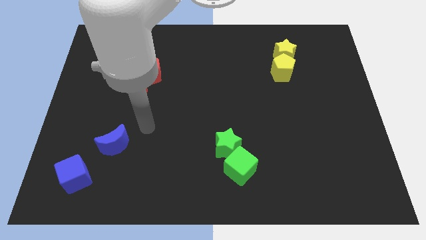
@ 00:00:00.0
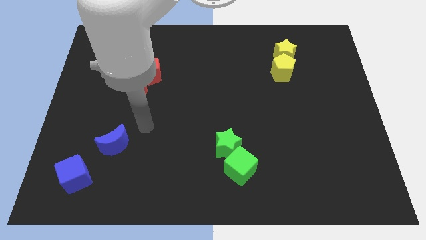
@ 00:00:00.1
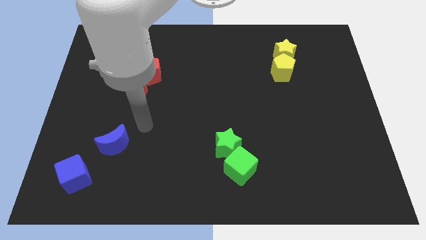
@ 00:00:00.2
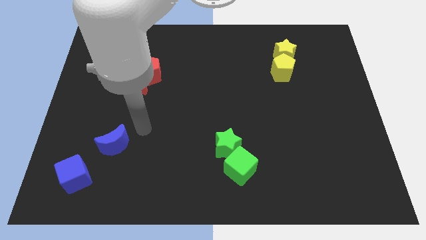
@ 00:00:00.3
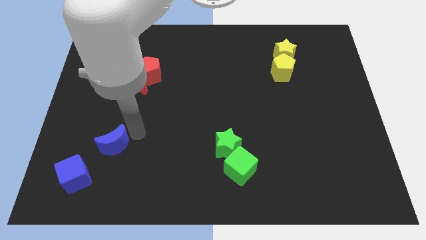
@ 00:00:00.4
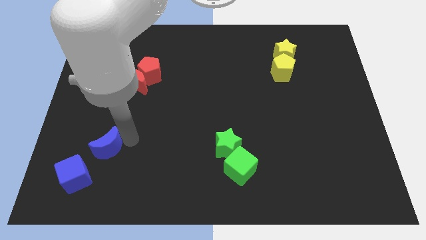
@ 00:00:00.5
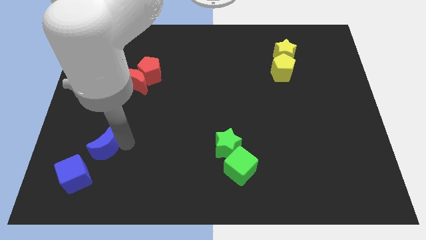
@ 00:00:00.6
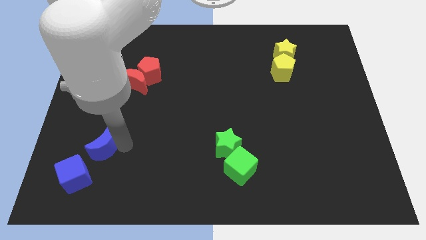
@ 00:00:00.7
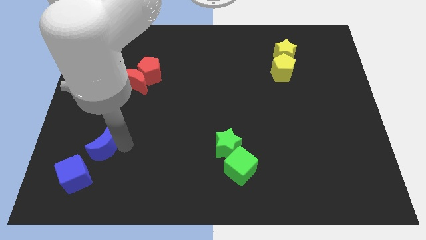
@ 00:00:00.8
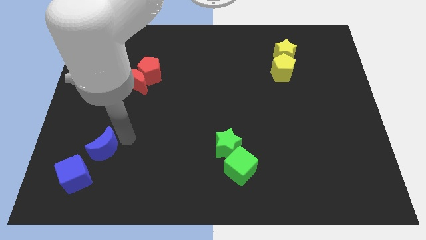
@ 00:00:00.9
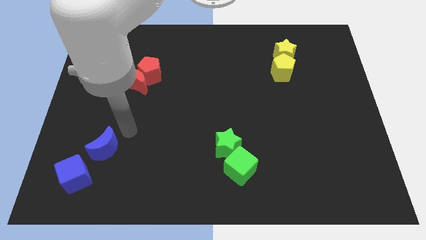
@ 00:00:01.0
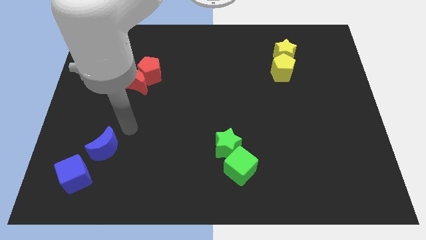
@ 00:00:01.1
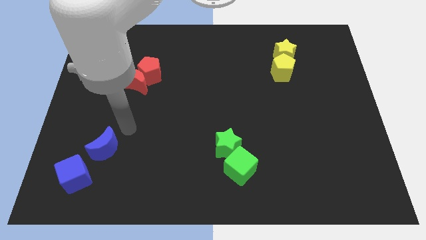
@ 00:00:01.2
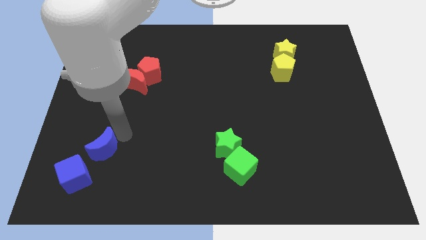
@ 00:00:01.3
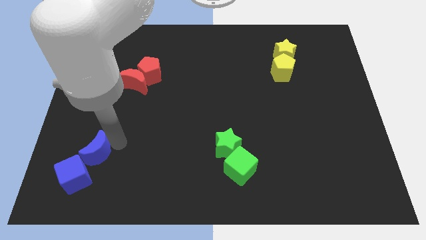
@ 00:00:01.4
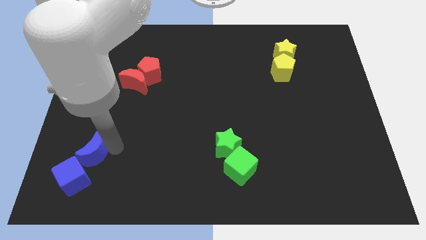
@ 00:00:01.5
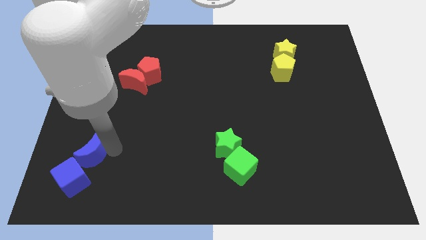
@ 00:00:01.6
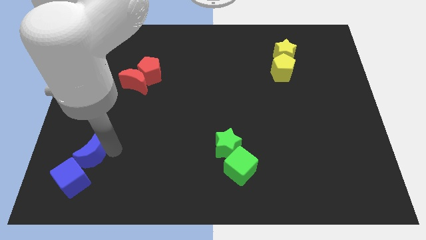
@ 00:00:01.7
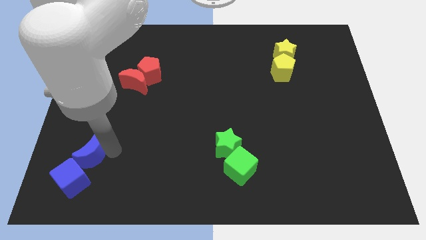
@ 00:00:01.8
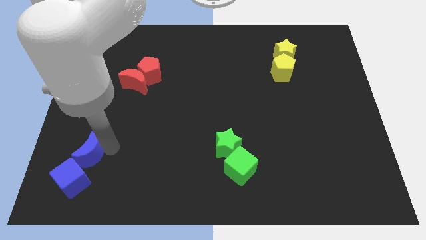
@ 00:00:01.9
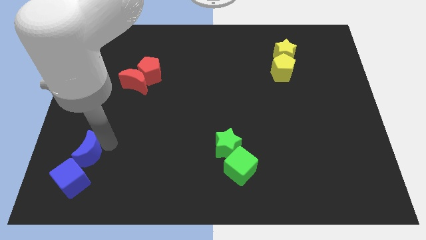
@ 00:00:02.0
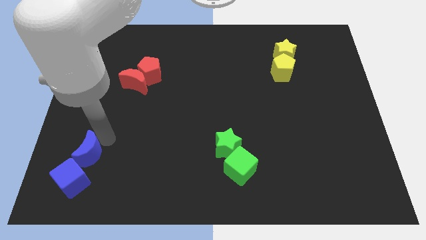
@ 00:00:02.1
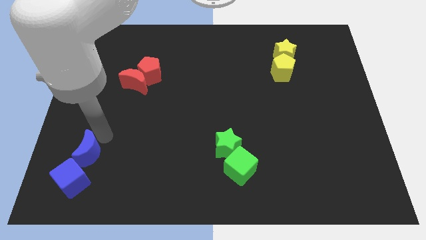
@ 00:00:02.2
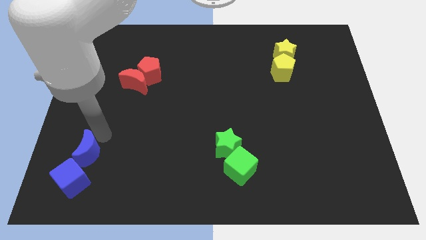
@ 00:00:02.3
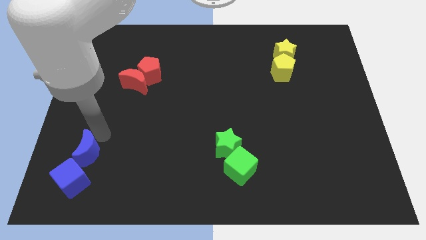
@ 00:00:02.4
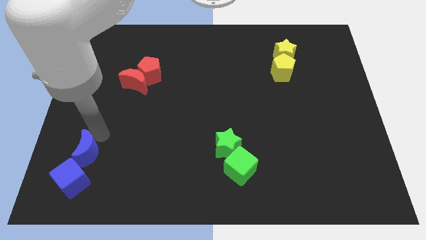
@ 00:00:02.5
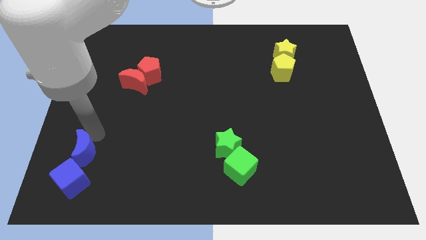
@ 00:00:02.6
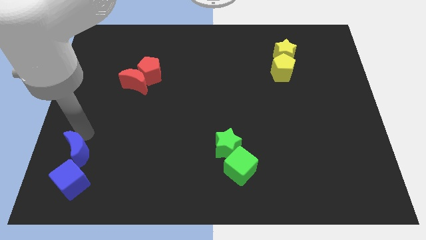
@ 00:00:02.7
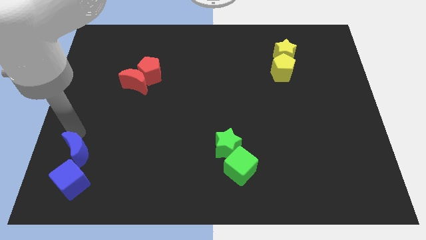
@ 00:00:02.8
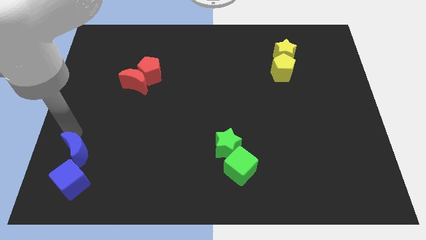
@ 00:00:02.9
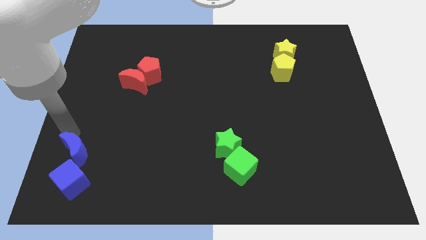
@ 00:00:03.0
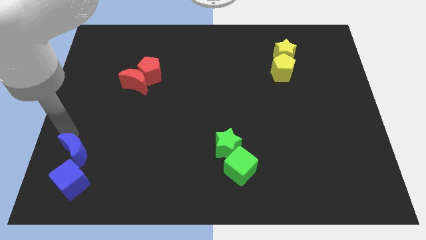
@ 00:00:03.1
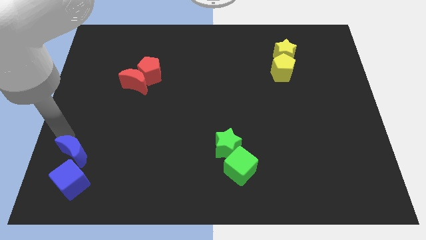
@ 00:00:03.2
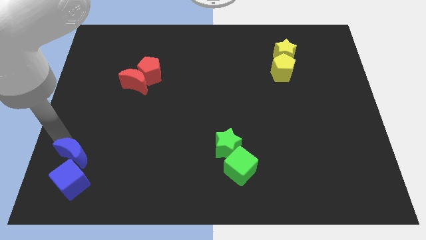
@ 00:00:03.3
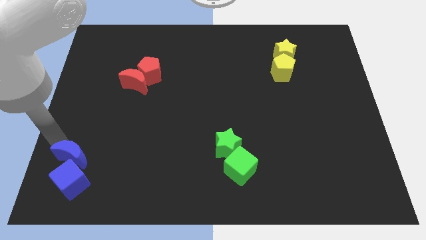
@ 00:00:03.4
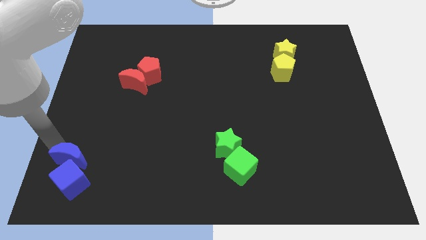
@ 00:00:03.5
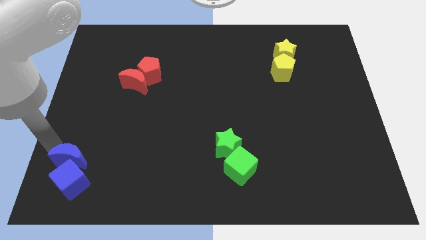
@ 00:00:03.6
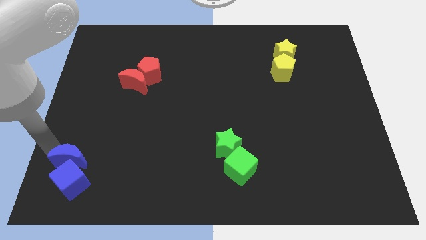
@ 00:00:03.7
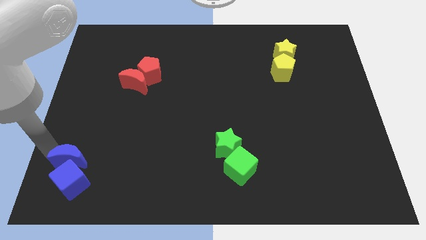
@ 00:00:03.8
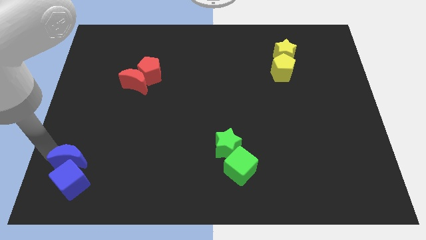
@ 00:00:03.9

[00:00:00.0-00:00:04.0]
push blue moon above the blue cube

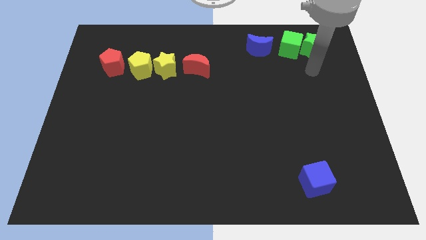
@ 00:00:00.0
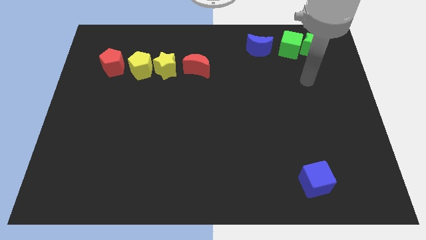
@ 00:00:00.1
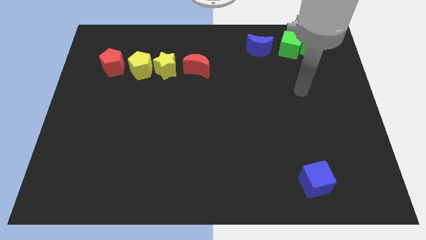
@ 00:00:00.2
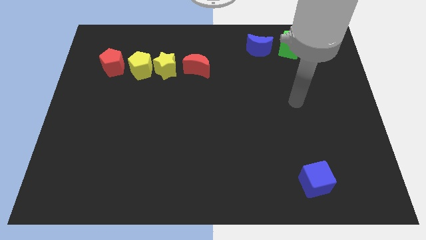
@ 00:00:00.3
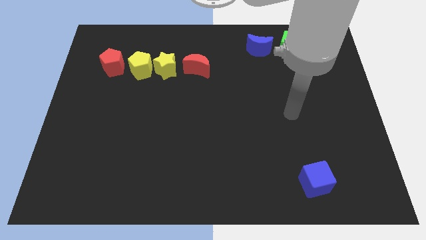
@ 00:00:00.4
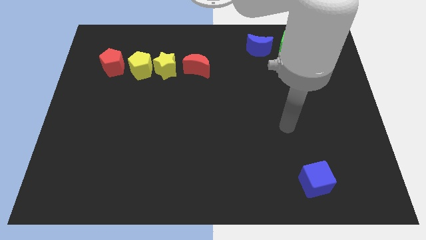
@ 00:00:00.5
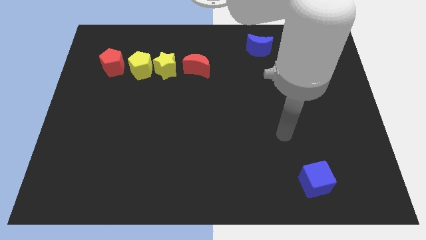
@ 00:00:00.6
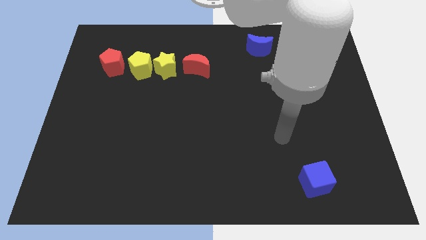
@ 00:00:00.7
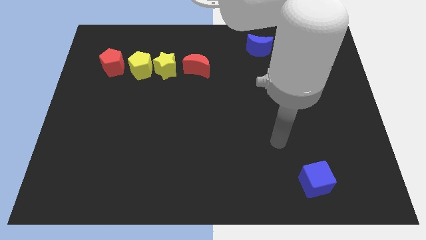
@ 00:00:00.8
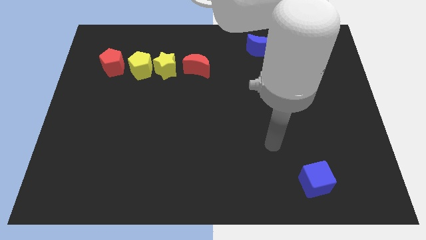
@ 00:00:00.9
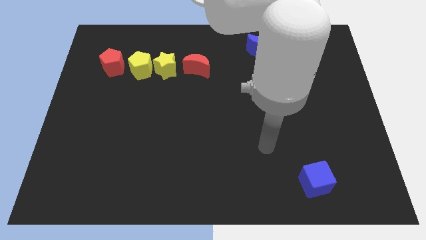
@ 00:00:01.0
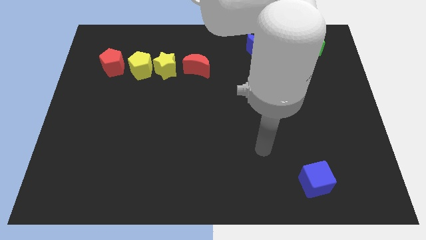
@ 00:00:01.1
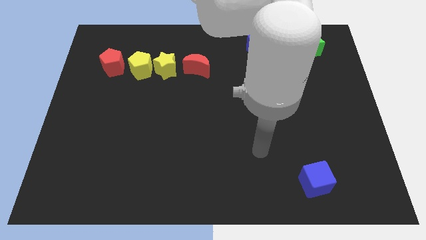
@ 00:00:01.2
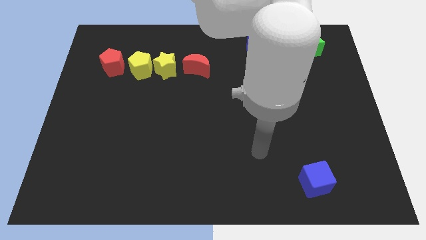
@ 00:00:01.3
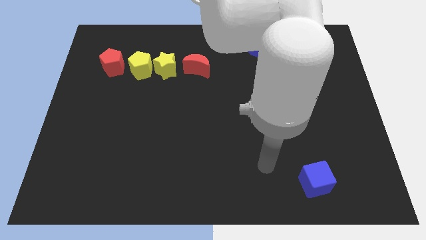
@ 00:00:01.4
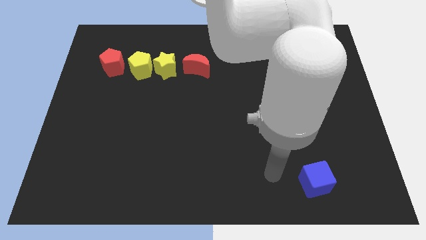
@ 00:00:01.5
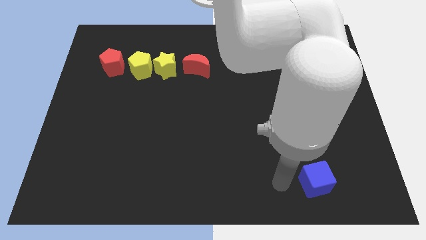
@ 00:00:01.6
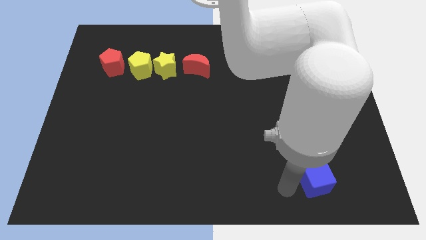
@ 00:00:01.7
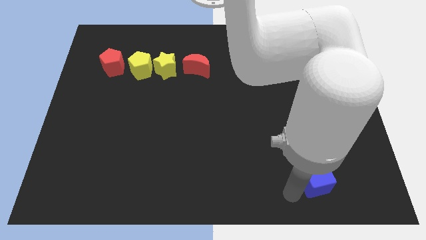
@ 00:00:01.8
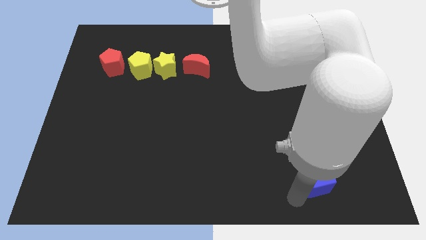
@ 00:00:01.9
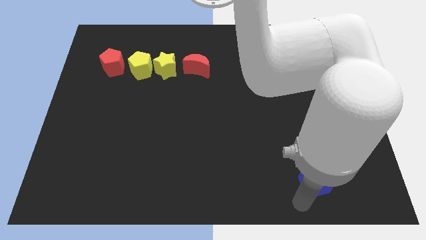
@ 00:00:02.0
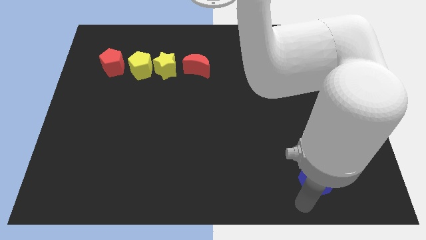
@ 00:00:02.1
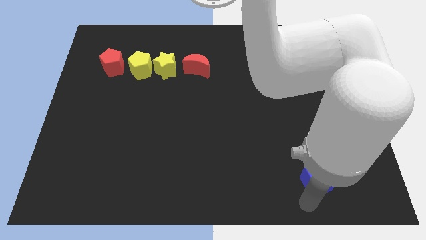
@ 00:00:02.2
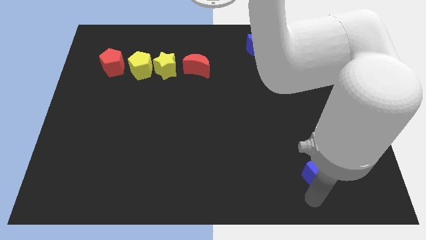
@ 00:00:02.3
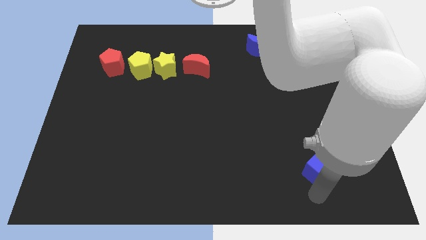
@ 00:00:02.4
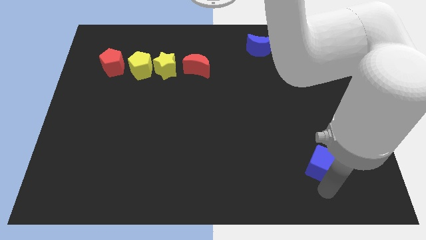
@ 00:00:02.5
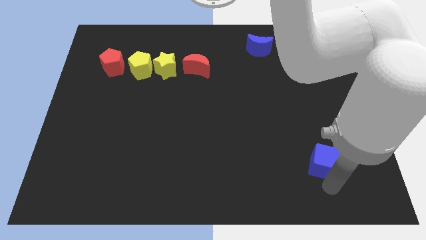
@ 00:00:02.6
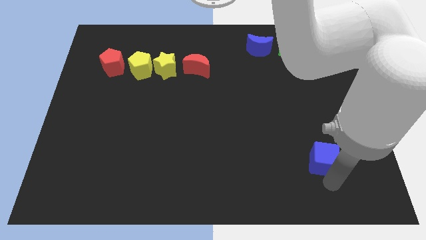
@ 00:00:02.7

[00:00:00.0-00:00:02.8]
push the blue cube up slightly

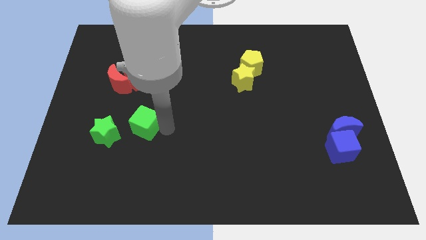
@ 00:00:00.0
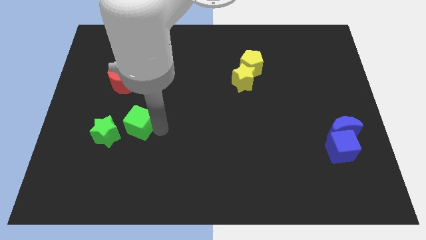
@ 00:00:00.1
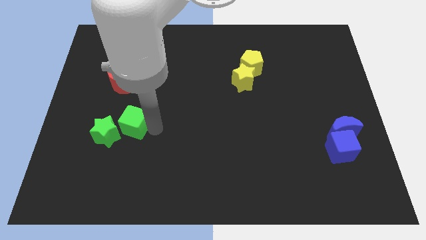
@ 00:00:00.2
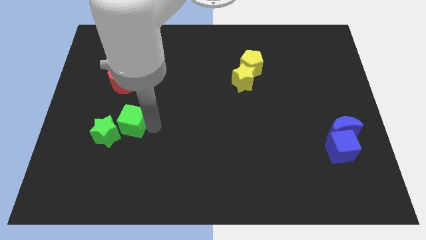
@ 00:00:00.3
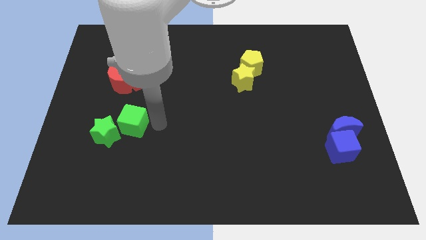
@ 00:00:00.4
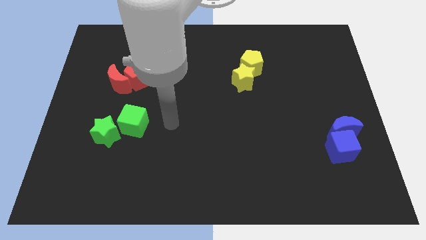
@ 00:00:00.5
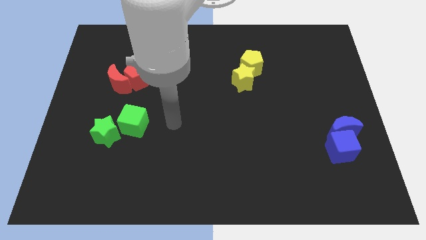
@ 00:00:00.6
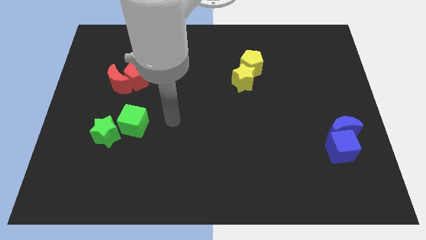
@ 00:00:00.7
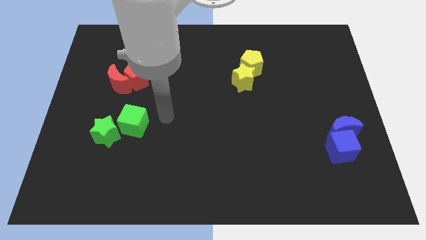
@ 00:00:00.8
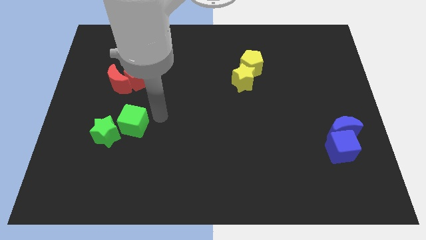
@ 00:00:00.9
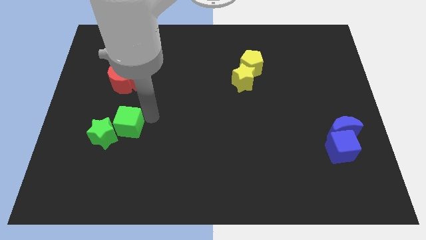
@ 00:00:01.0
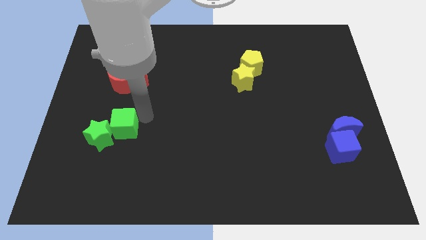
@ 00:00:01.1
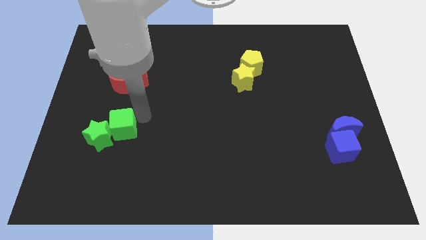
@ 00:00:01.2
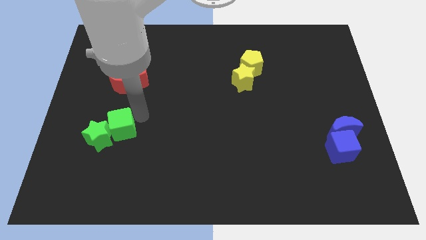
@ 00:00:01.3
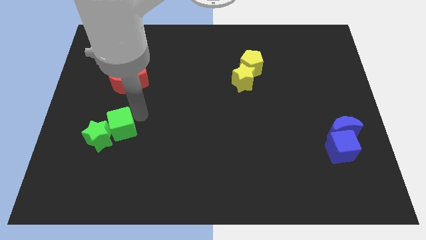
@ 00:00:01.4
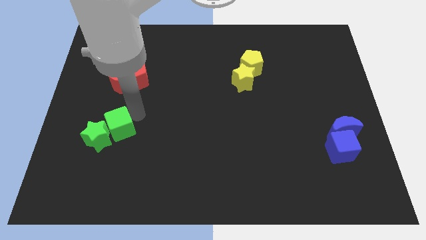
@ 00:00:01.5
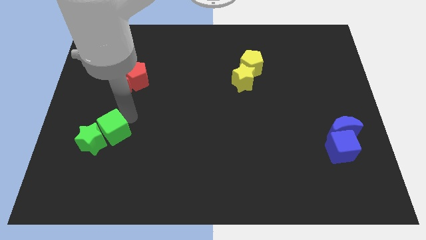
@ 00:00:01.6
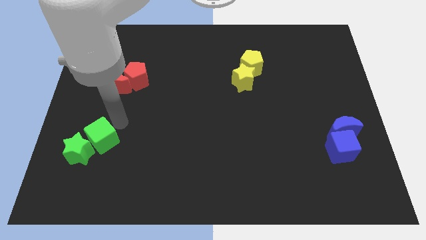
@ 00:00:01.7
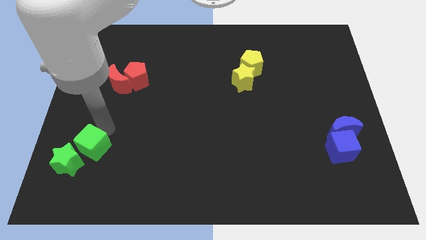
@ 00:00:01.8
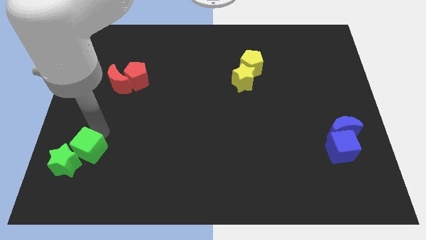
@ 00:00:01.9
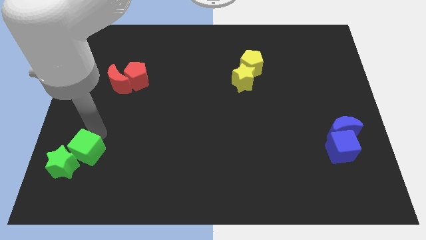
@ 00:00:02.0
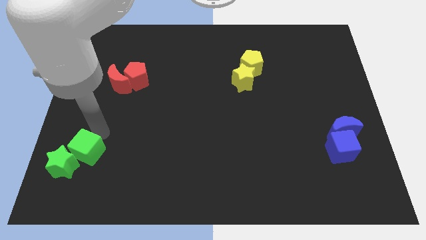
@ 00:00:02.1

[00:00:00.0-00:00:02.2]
move the green cube into the green star
